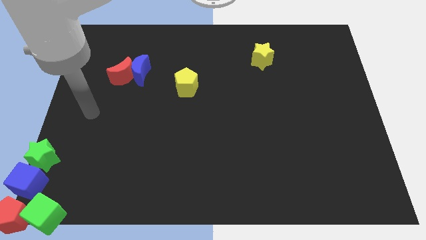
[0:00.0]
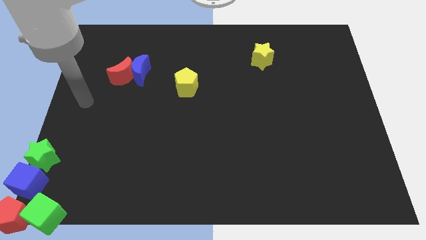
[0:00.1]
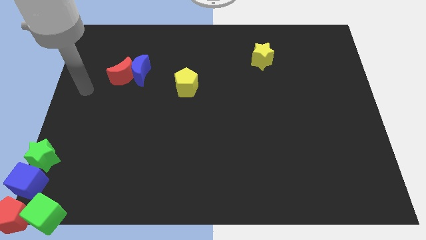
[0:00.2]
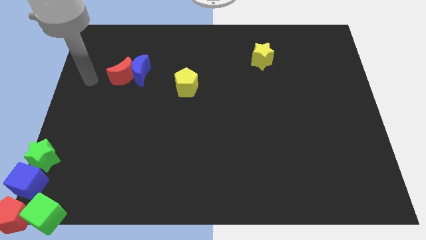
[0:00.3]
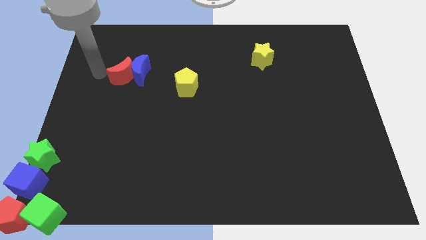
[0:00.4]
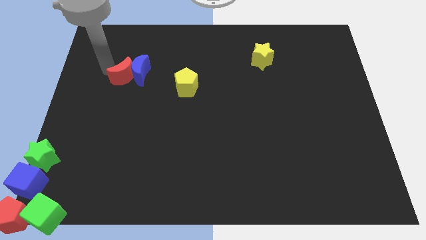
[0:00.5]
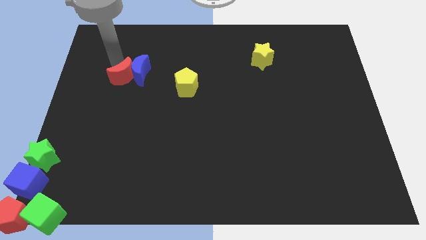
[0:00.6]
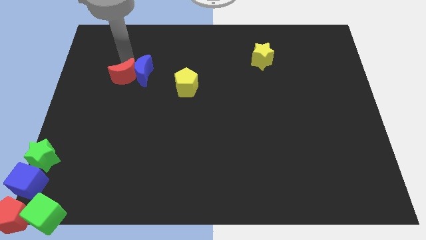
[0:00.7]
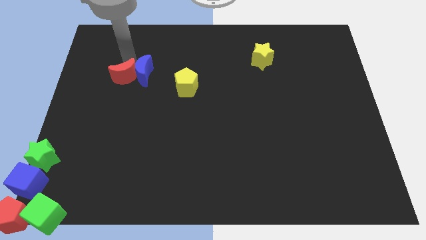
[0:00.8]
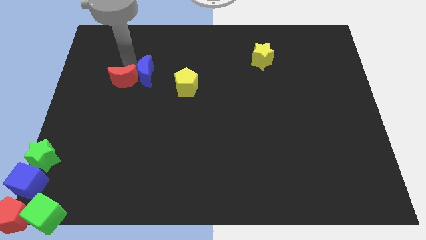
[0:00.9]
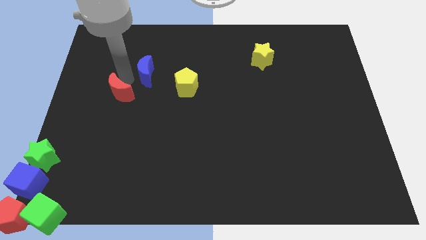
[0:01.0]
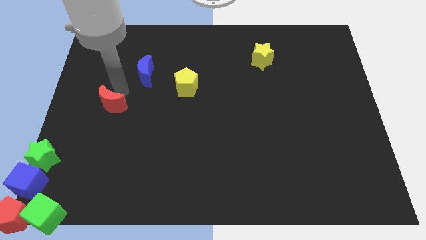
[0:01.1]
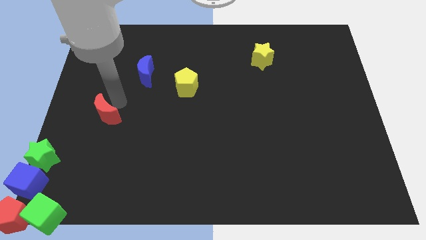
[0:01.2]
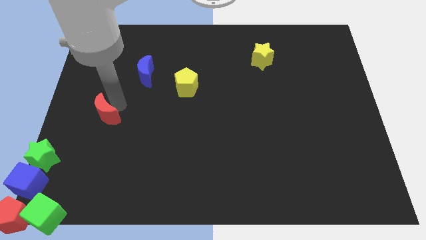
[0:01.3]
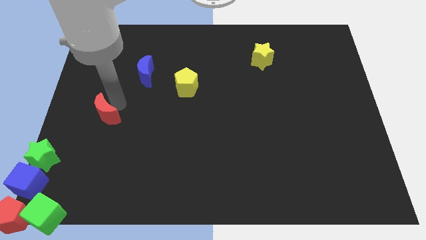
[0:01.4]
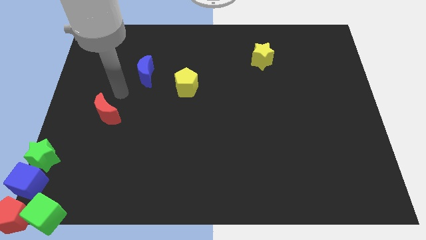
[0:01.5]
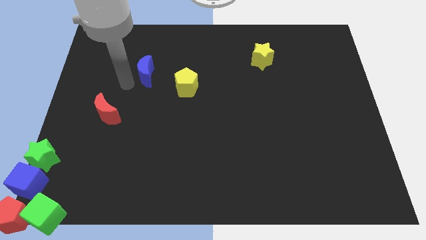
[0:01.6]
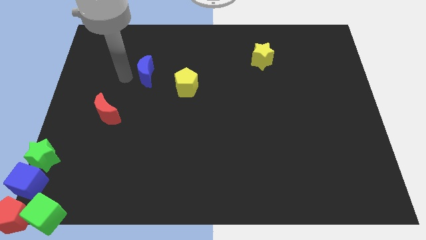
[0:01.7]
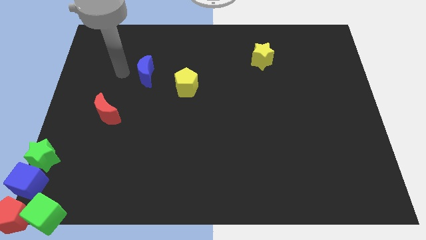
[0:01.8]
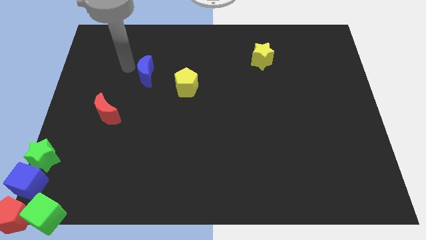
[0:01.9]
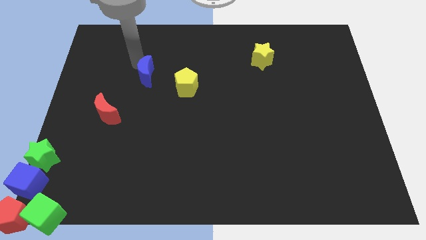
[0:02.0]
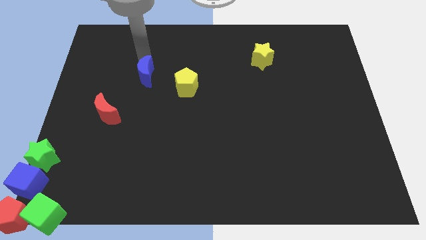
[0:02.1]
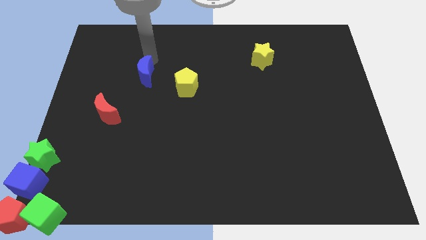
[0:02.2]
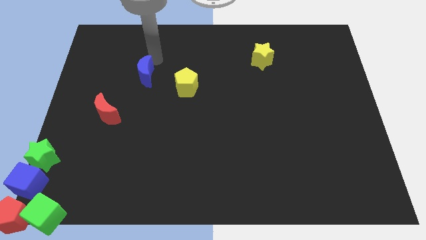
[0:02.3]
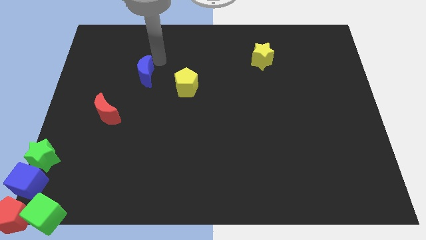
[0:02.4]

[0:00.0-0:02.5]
separate the red moon from the blue crescent

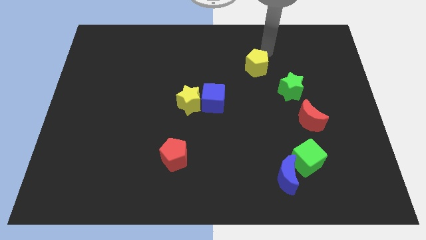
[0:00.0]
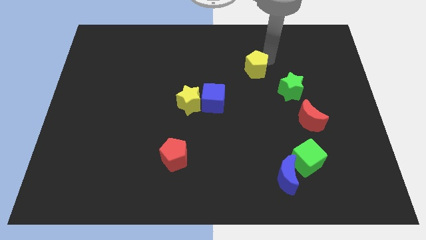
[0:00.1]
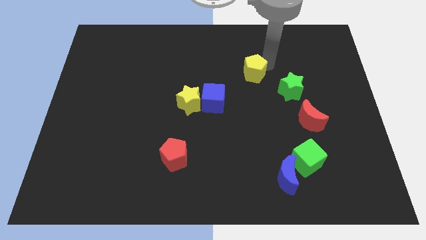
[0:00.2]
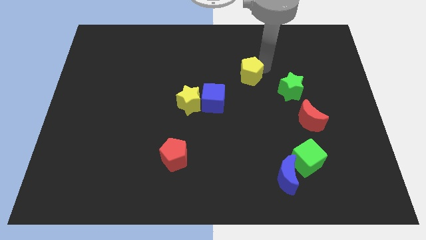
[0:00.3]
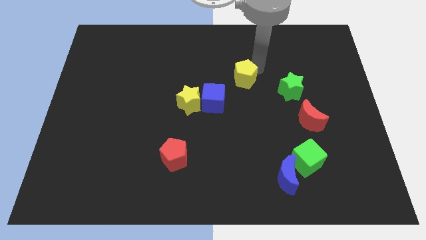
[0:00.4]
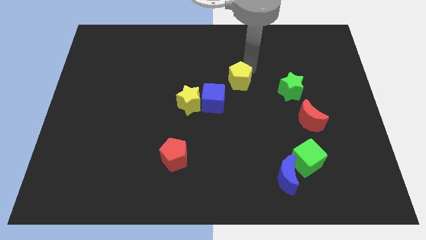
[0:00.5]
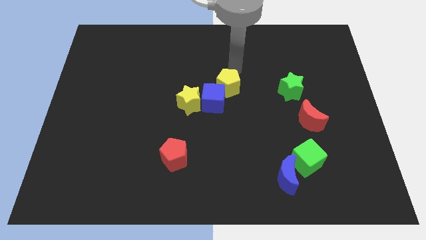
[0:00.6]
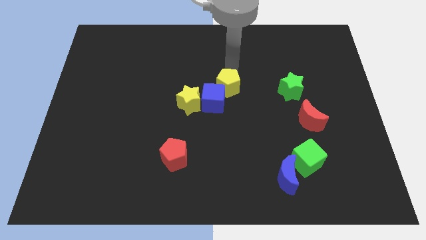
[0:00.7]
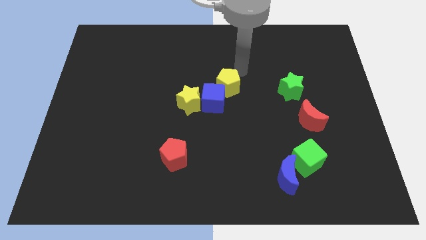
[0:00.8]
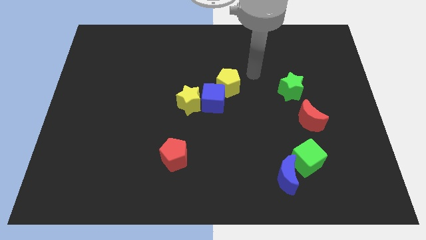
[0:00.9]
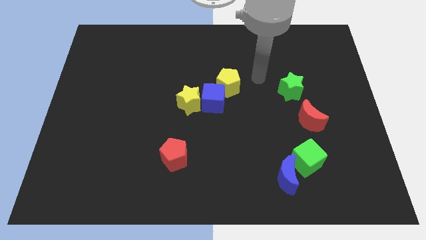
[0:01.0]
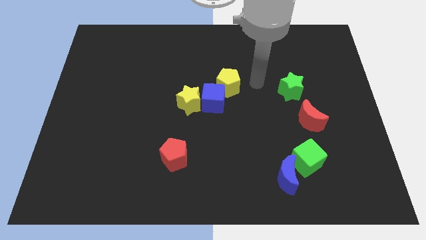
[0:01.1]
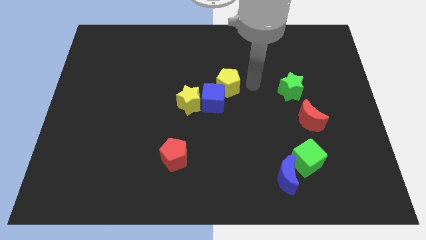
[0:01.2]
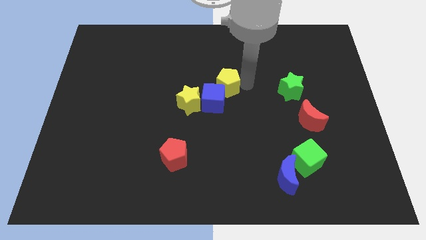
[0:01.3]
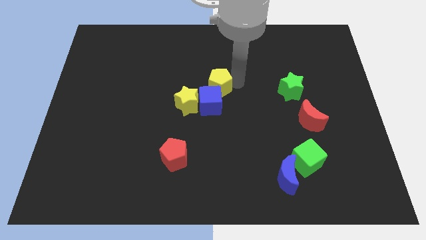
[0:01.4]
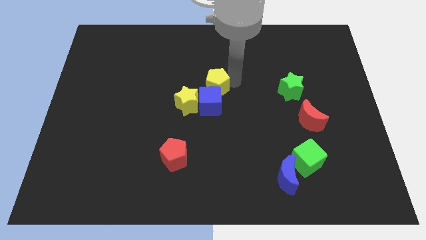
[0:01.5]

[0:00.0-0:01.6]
push the yellow pentagon above the blue cube

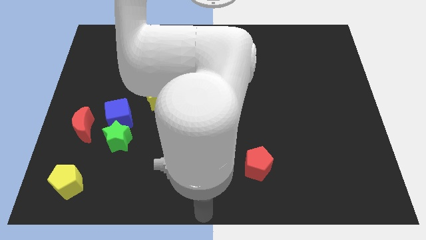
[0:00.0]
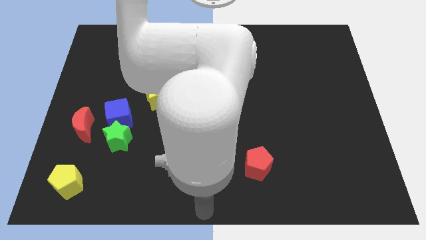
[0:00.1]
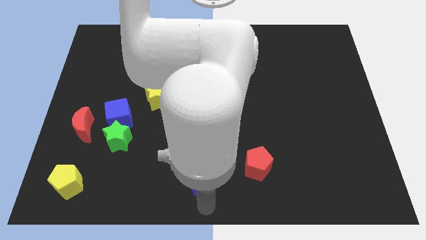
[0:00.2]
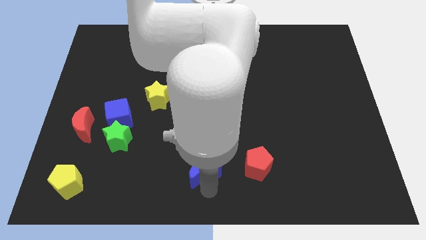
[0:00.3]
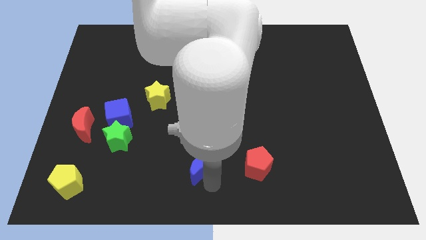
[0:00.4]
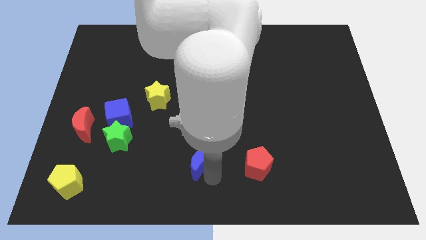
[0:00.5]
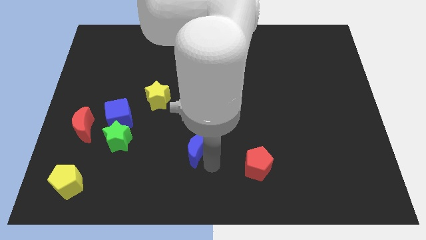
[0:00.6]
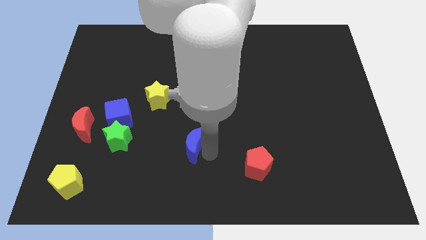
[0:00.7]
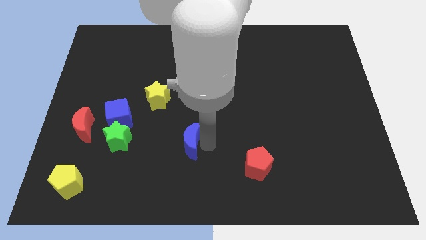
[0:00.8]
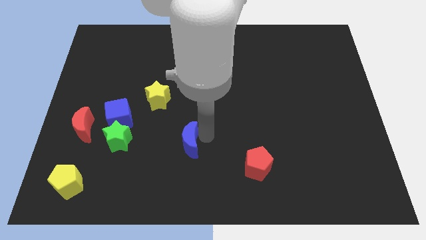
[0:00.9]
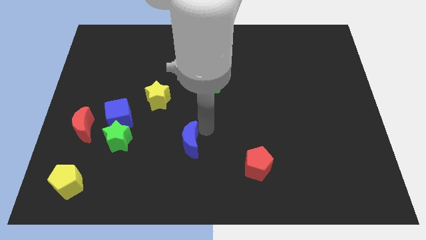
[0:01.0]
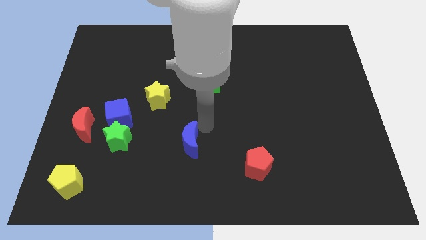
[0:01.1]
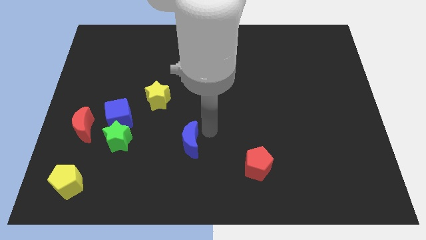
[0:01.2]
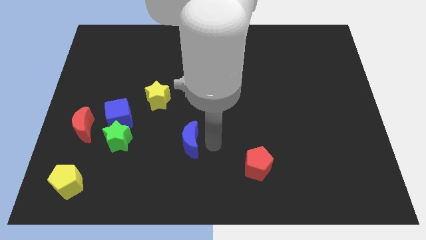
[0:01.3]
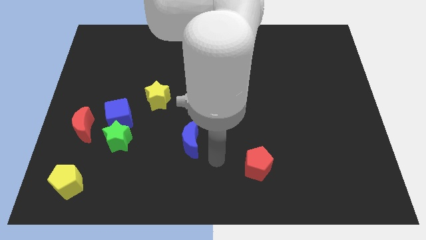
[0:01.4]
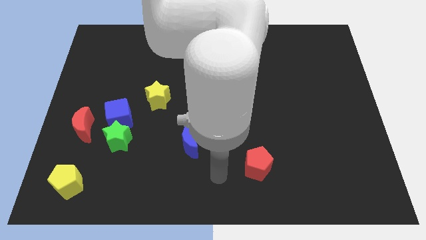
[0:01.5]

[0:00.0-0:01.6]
push the blue crescent slightly towards the center of the board

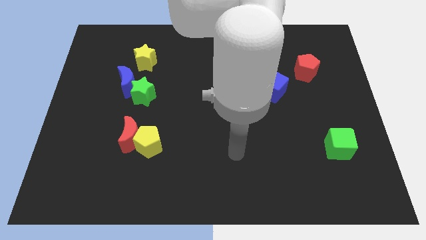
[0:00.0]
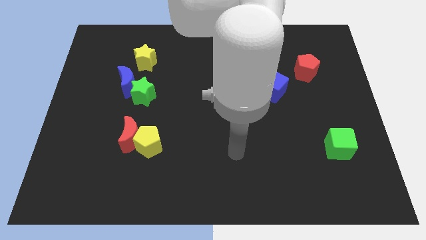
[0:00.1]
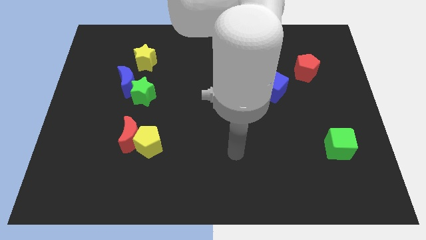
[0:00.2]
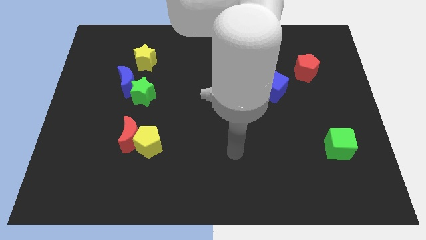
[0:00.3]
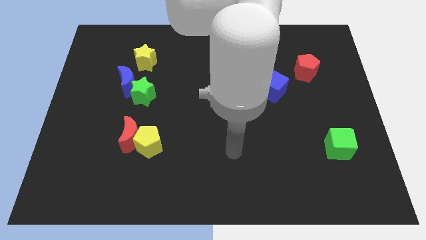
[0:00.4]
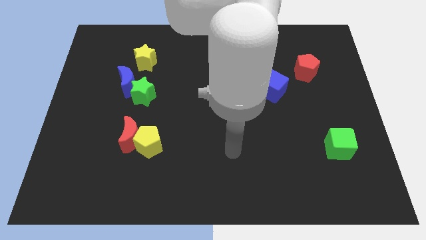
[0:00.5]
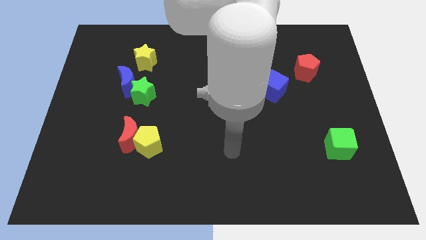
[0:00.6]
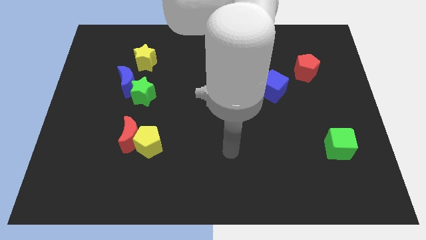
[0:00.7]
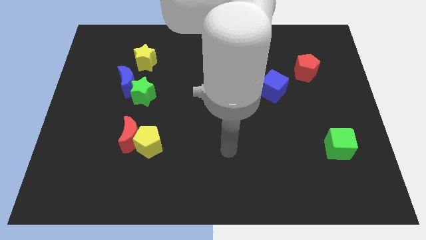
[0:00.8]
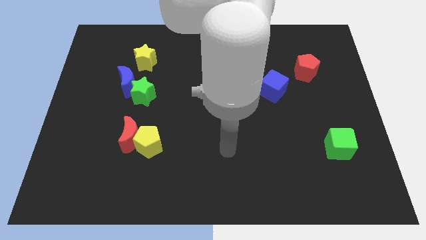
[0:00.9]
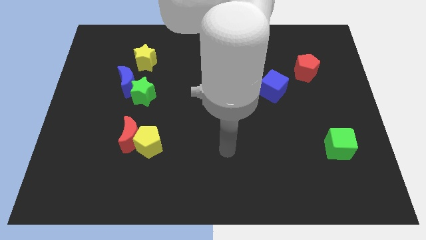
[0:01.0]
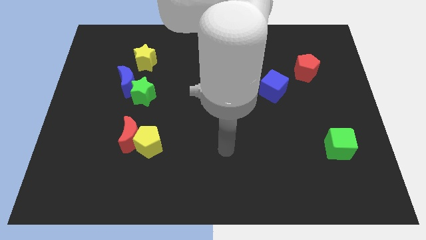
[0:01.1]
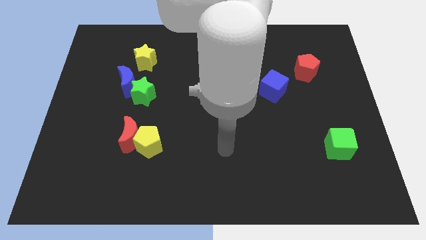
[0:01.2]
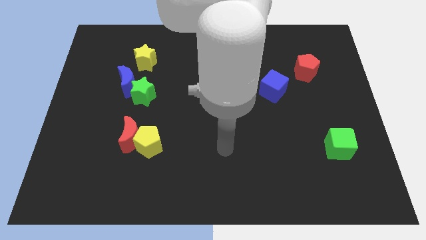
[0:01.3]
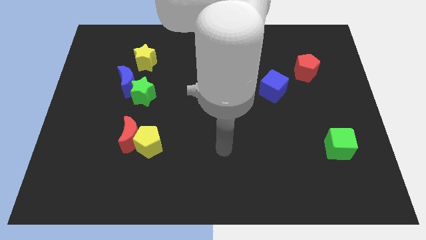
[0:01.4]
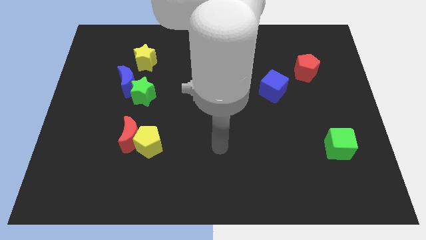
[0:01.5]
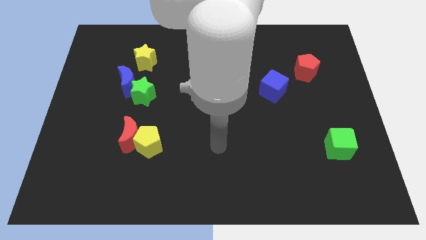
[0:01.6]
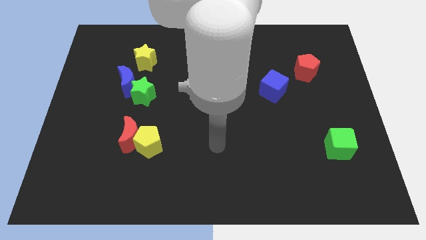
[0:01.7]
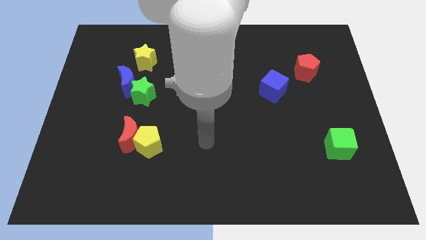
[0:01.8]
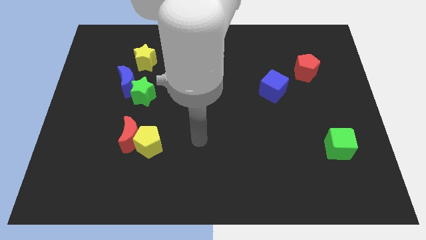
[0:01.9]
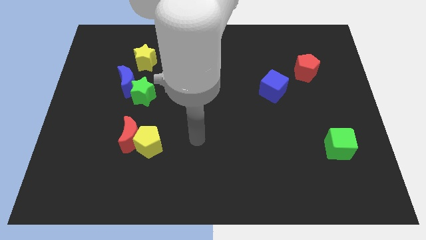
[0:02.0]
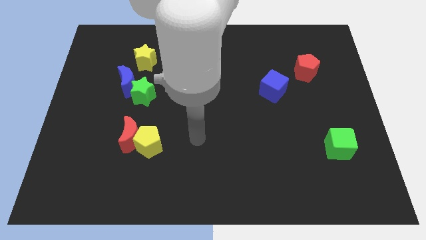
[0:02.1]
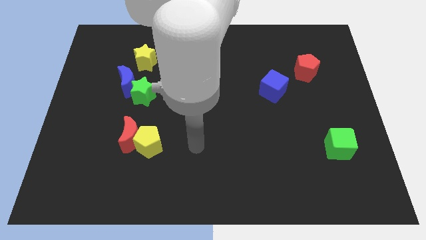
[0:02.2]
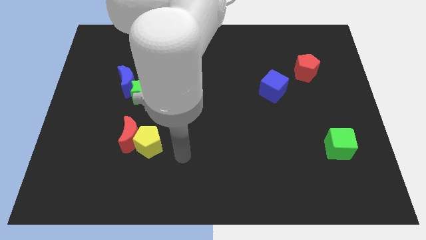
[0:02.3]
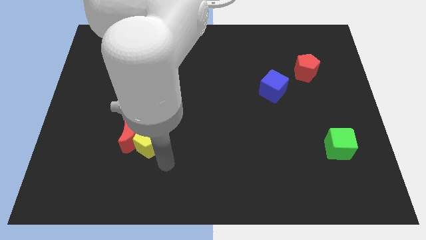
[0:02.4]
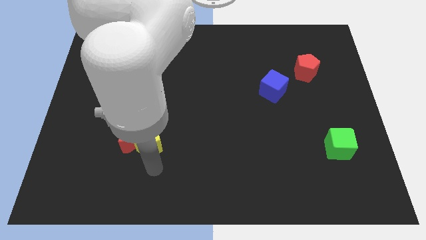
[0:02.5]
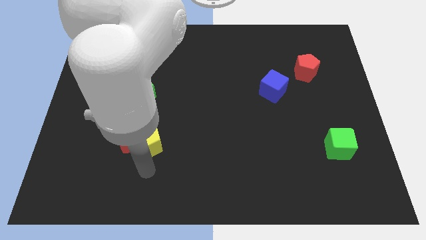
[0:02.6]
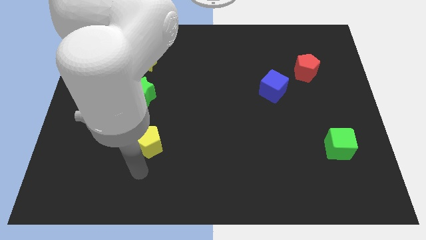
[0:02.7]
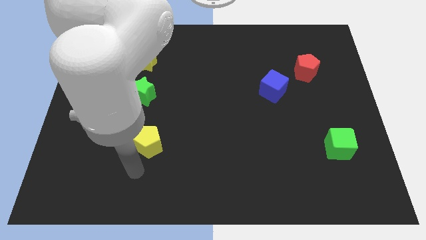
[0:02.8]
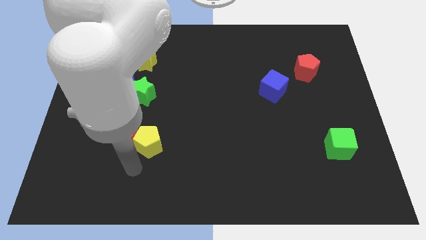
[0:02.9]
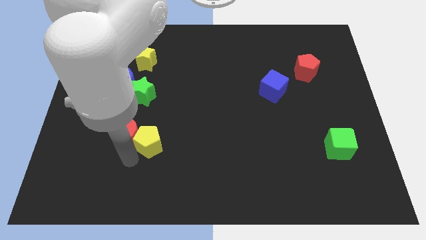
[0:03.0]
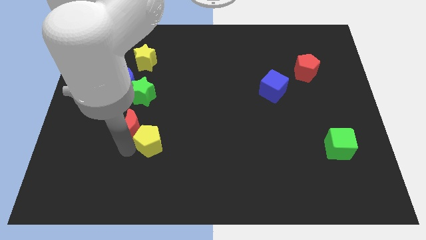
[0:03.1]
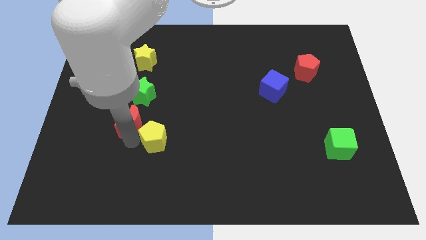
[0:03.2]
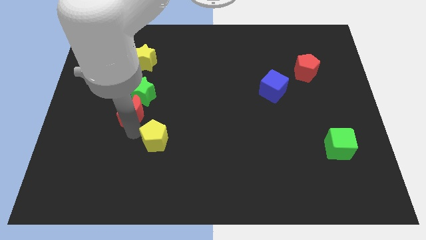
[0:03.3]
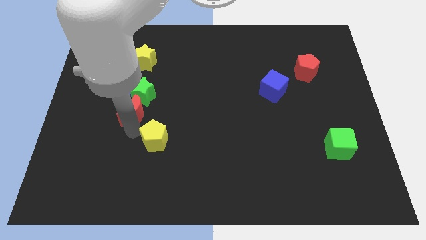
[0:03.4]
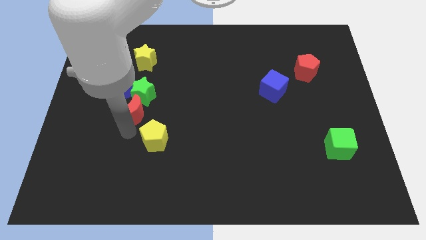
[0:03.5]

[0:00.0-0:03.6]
separate the yellow pentagon from the red crescent
